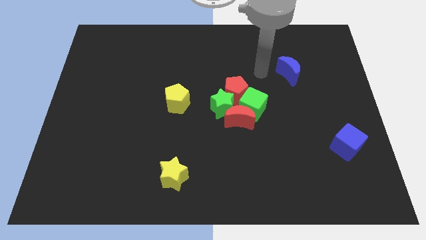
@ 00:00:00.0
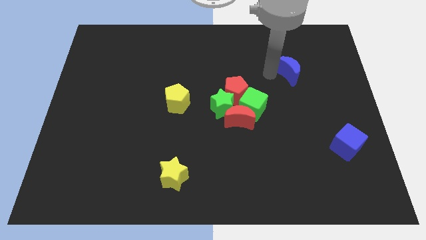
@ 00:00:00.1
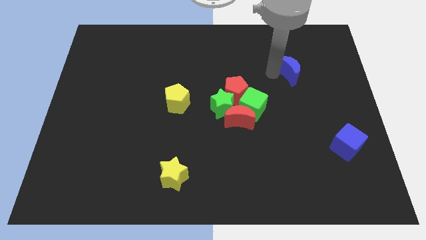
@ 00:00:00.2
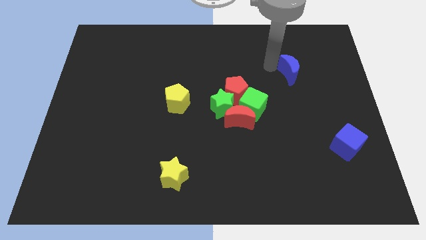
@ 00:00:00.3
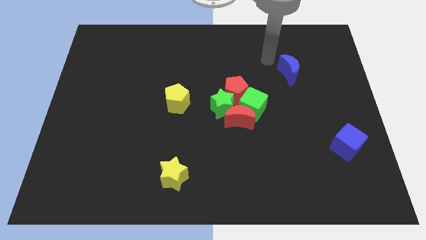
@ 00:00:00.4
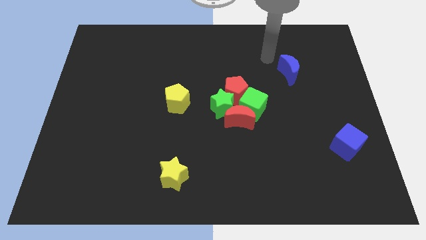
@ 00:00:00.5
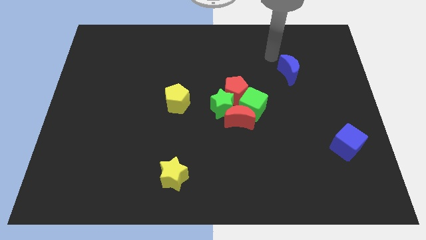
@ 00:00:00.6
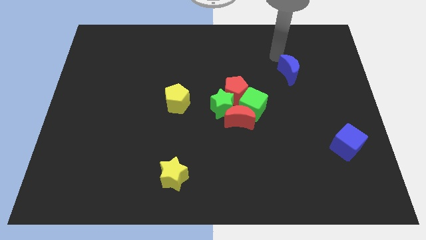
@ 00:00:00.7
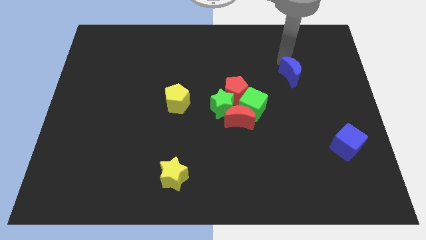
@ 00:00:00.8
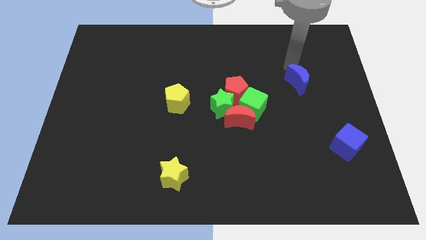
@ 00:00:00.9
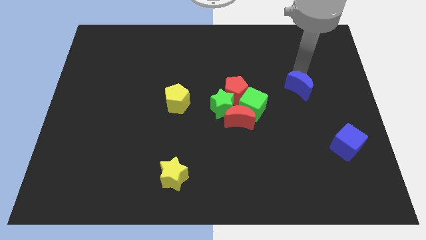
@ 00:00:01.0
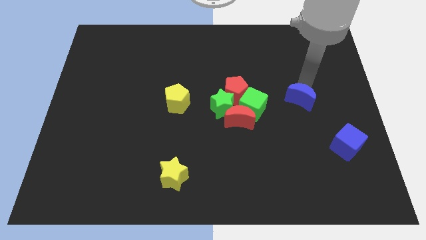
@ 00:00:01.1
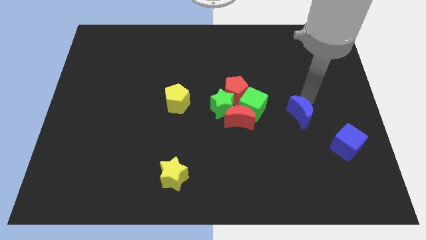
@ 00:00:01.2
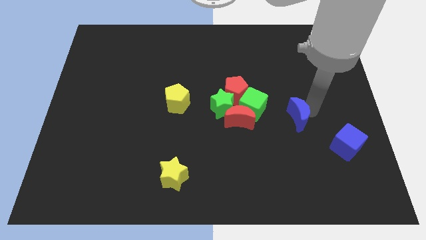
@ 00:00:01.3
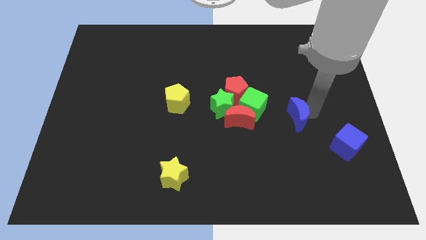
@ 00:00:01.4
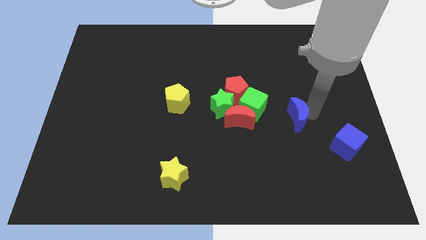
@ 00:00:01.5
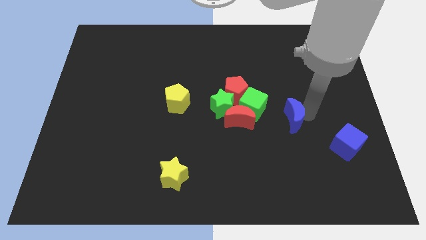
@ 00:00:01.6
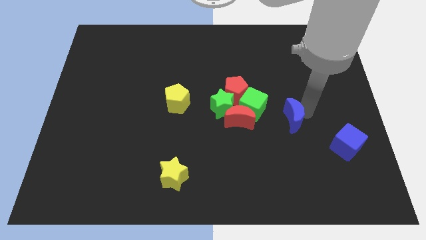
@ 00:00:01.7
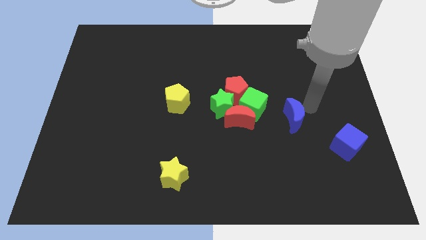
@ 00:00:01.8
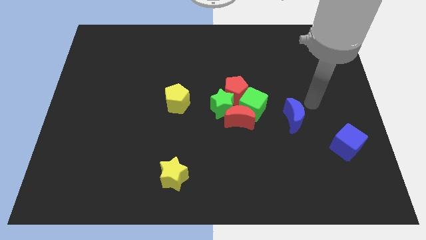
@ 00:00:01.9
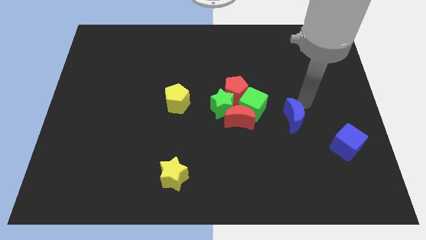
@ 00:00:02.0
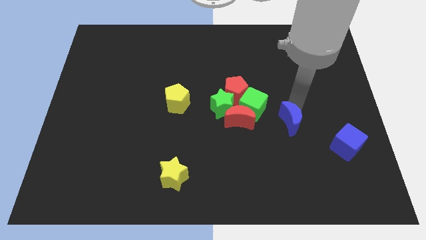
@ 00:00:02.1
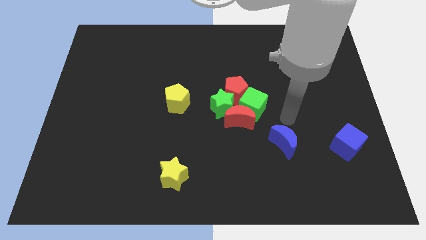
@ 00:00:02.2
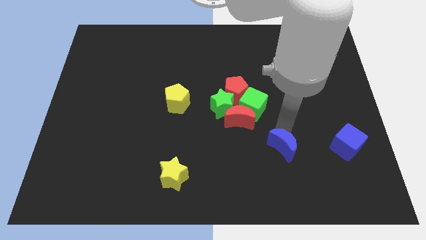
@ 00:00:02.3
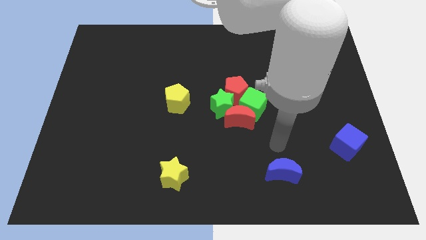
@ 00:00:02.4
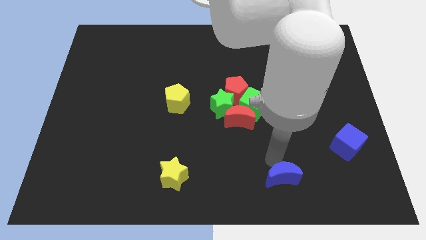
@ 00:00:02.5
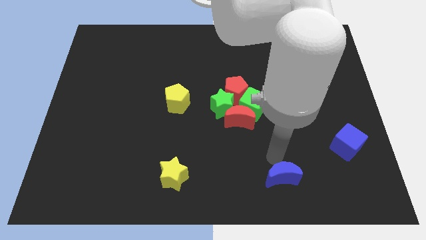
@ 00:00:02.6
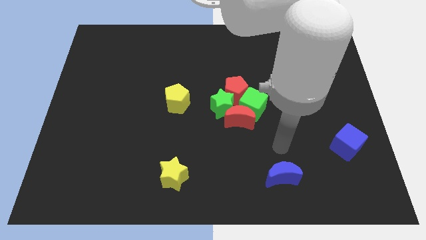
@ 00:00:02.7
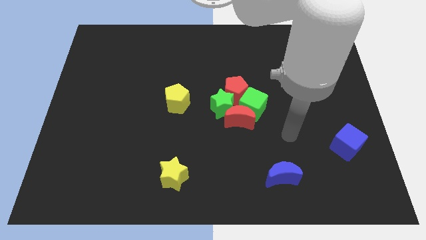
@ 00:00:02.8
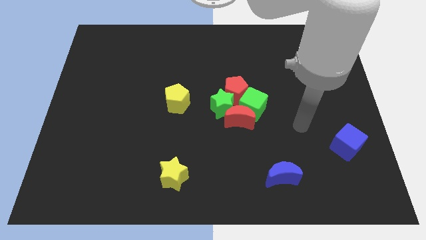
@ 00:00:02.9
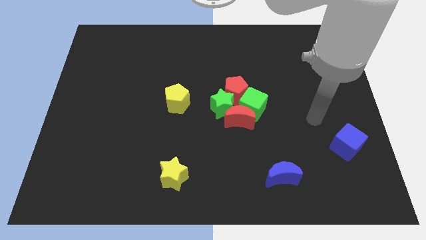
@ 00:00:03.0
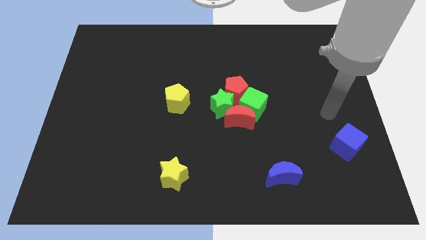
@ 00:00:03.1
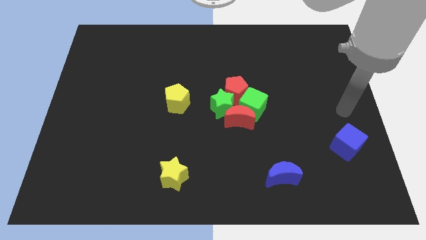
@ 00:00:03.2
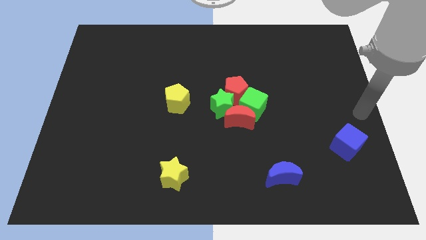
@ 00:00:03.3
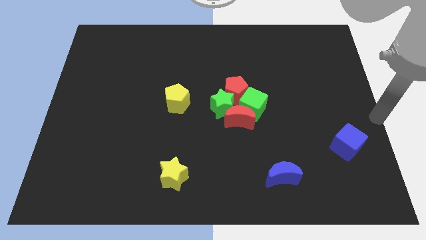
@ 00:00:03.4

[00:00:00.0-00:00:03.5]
move the blue crescent diagonally left of the blue cube

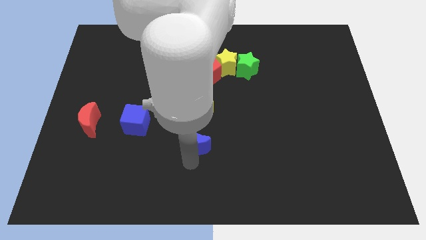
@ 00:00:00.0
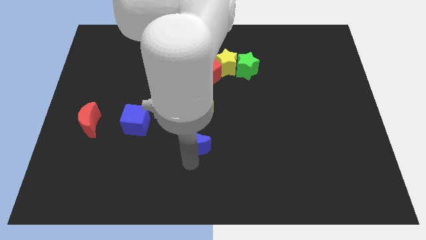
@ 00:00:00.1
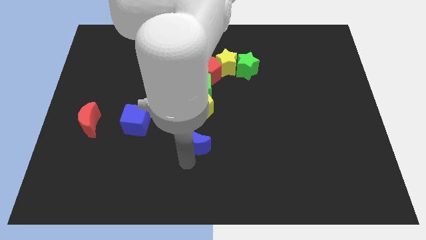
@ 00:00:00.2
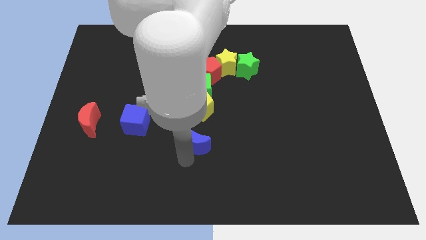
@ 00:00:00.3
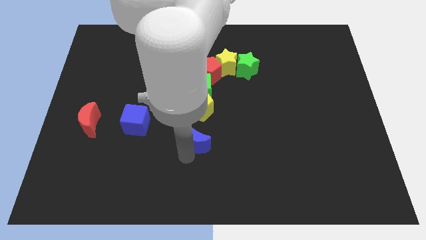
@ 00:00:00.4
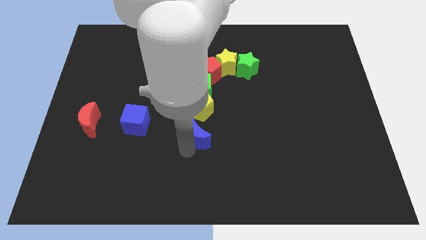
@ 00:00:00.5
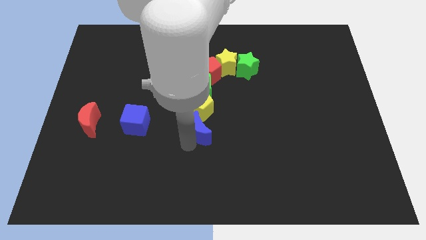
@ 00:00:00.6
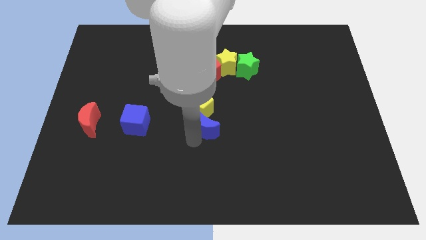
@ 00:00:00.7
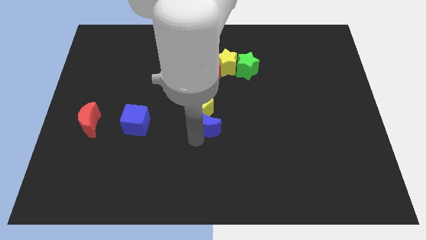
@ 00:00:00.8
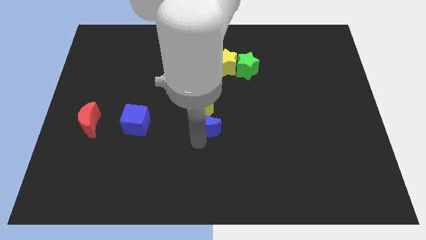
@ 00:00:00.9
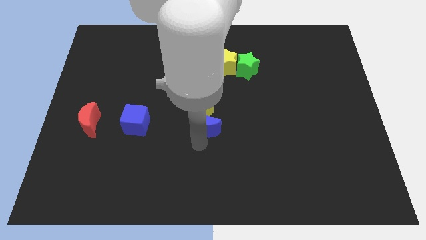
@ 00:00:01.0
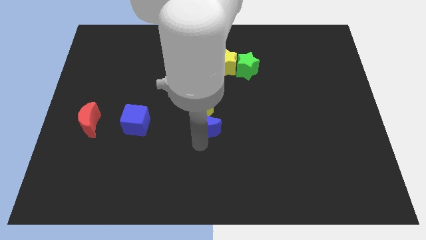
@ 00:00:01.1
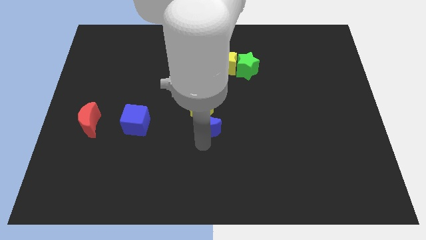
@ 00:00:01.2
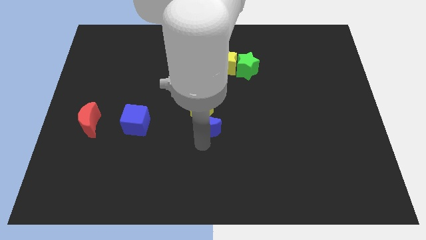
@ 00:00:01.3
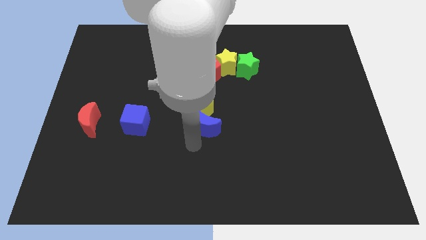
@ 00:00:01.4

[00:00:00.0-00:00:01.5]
move the blue crescent to the bottom of the yellow pentagon

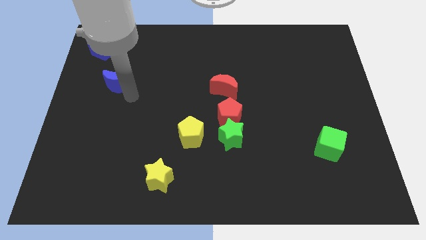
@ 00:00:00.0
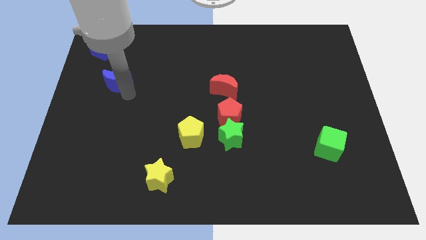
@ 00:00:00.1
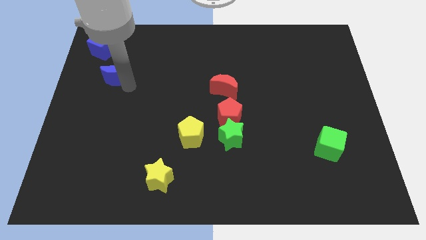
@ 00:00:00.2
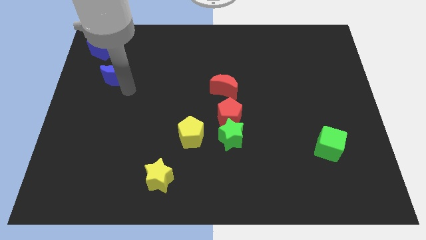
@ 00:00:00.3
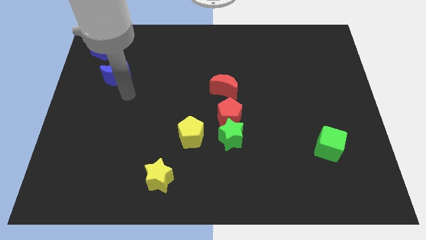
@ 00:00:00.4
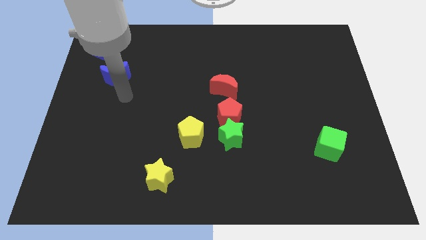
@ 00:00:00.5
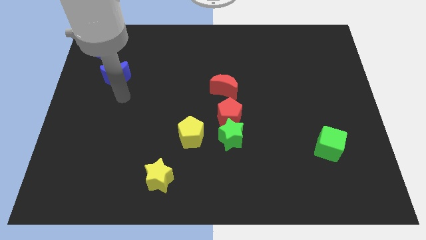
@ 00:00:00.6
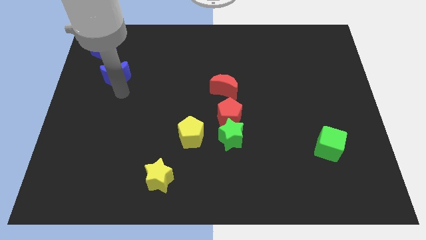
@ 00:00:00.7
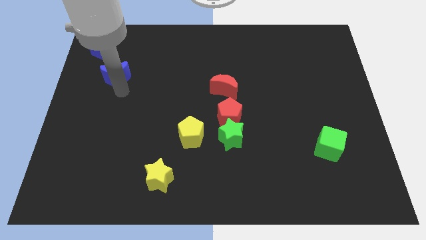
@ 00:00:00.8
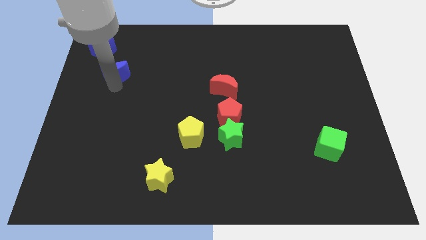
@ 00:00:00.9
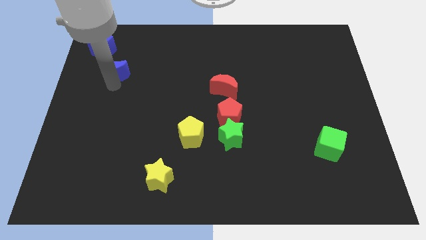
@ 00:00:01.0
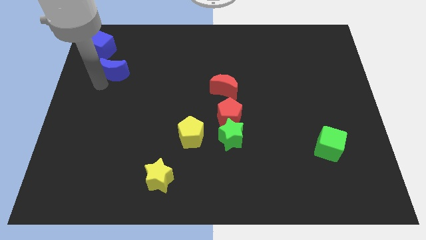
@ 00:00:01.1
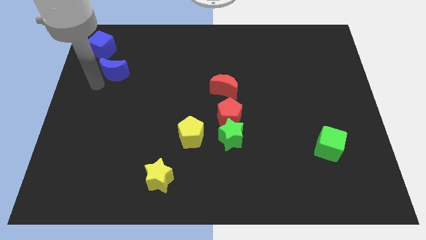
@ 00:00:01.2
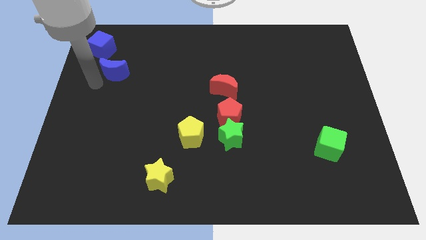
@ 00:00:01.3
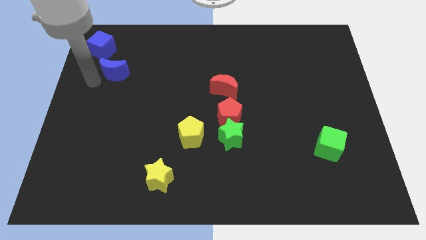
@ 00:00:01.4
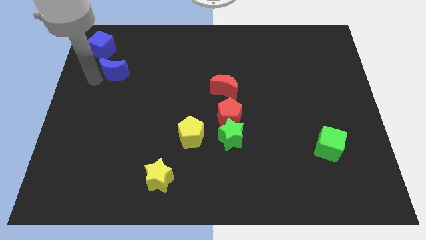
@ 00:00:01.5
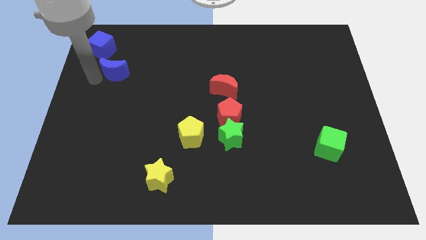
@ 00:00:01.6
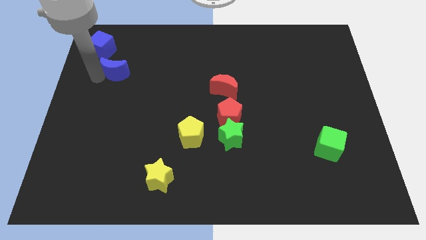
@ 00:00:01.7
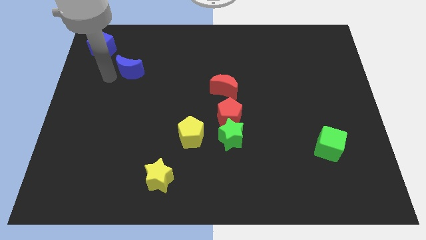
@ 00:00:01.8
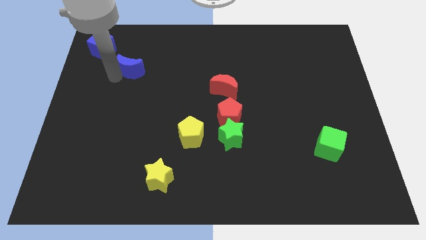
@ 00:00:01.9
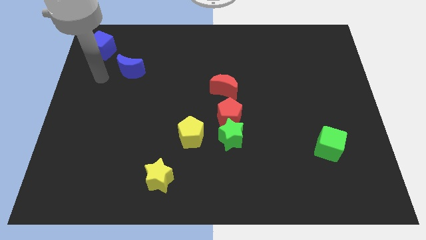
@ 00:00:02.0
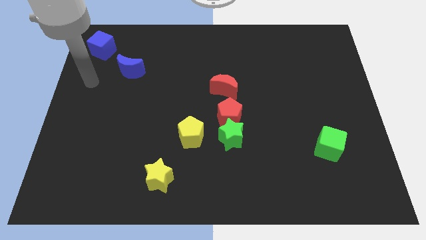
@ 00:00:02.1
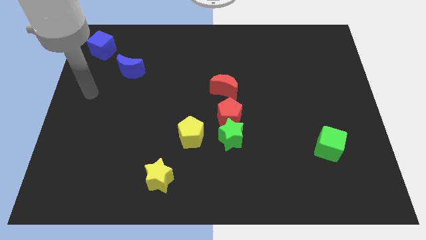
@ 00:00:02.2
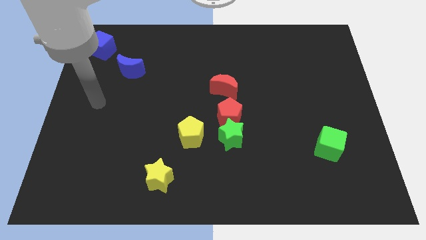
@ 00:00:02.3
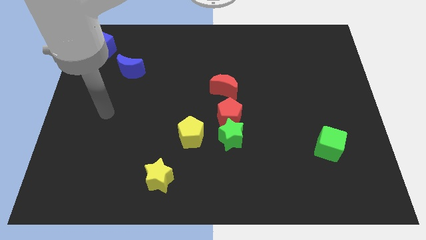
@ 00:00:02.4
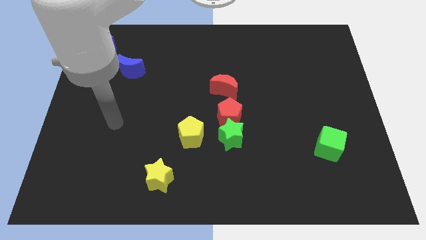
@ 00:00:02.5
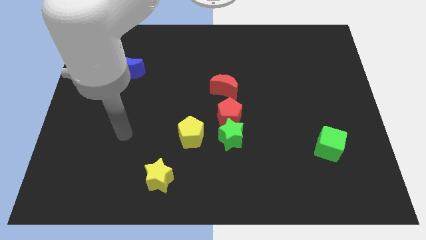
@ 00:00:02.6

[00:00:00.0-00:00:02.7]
push the blue crescent up

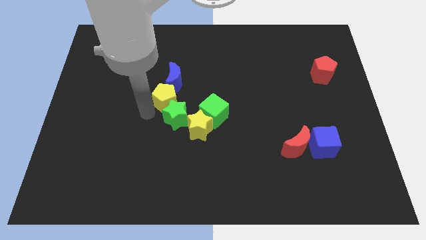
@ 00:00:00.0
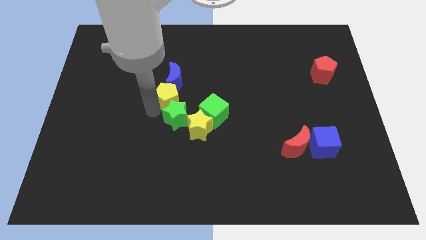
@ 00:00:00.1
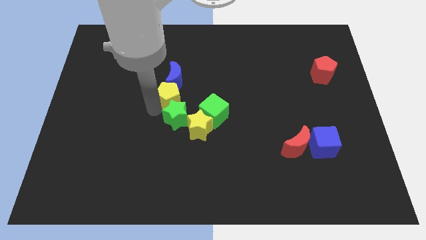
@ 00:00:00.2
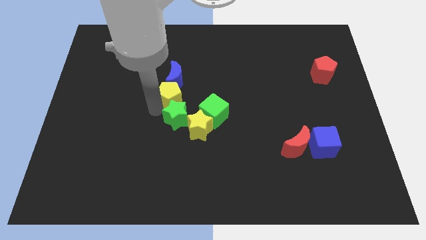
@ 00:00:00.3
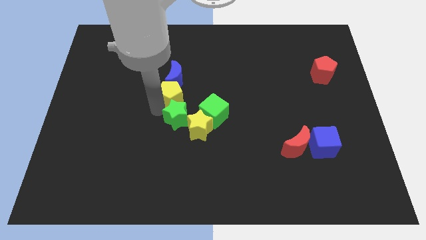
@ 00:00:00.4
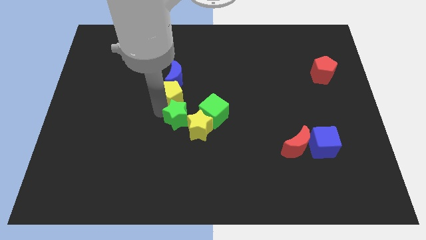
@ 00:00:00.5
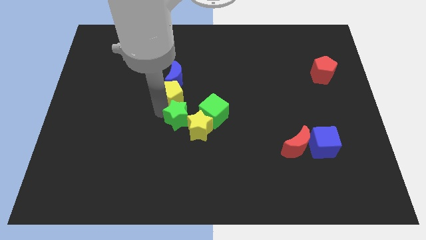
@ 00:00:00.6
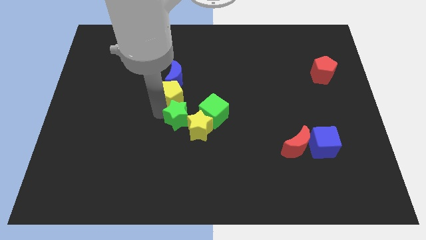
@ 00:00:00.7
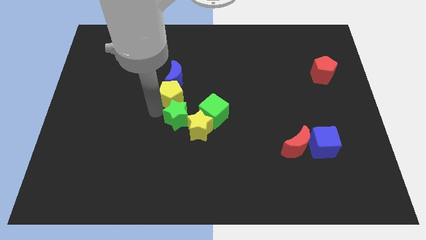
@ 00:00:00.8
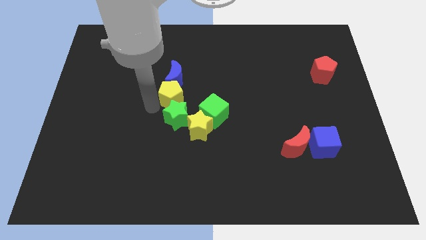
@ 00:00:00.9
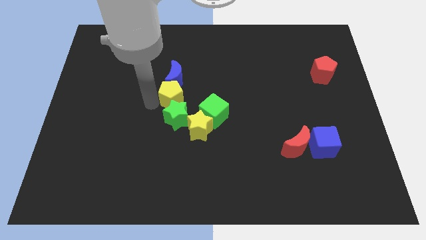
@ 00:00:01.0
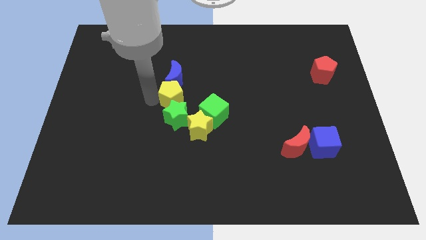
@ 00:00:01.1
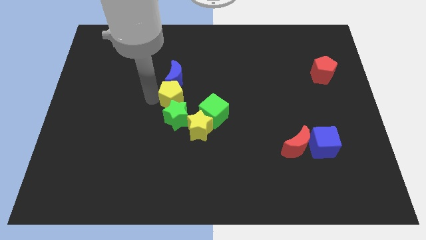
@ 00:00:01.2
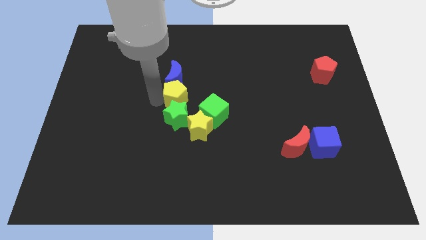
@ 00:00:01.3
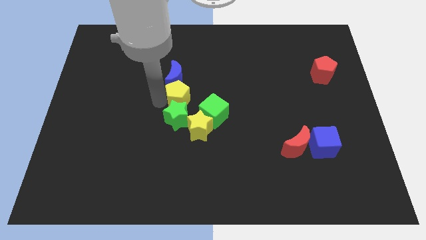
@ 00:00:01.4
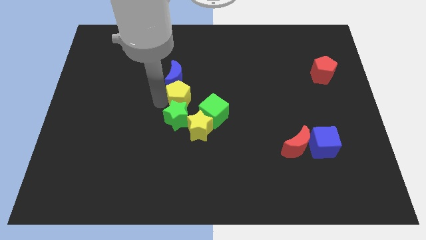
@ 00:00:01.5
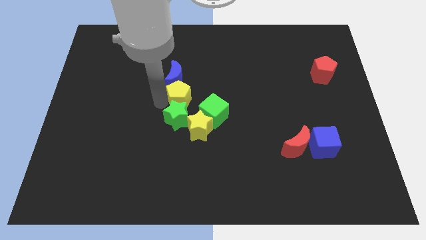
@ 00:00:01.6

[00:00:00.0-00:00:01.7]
place the yellow pentagon in between the blue crescent and the green star
